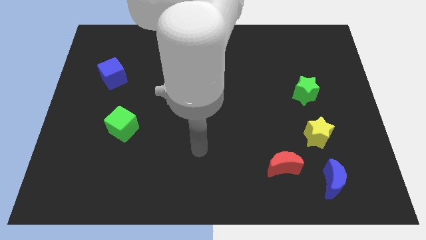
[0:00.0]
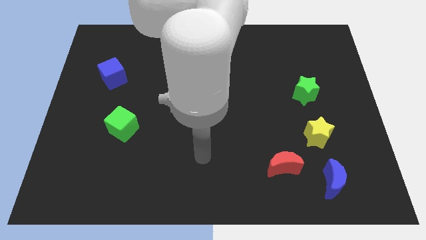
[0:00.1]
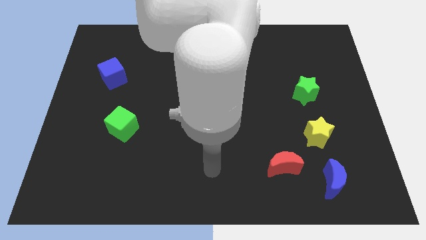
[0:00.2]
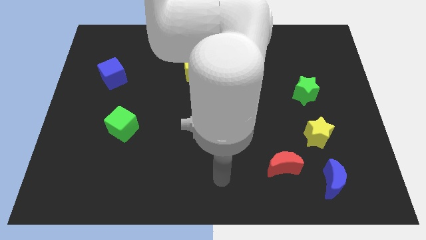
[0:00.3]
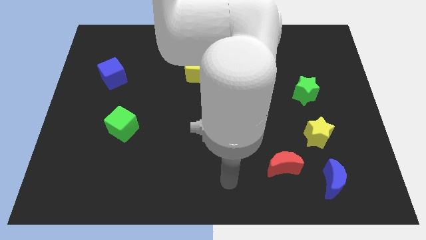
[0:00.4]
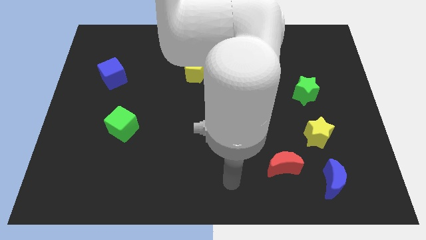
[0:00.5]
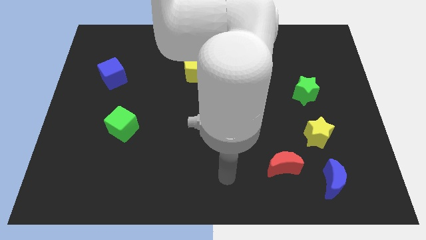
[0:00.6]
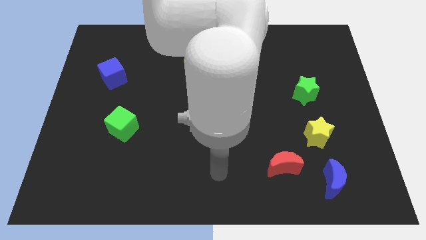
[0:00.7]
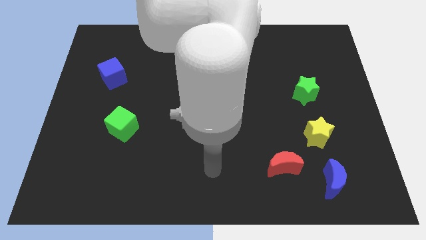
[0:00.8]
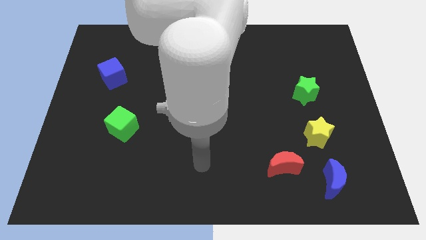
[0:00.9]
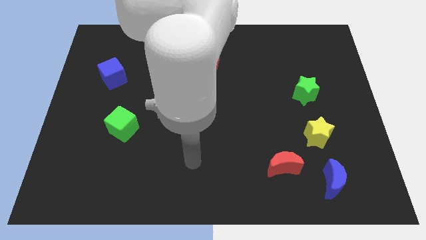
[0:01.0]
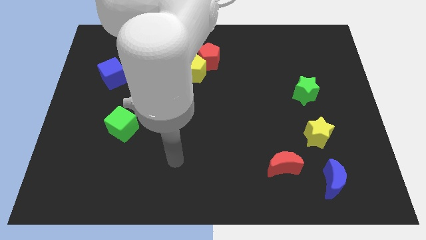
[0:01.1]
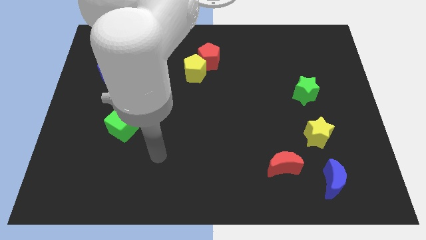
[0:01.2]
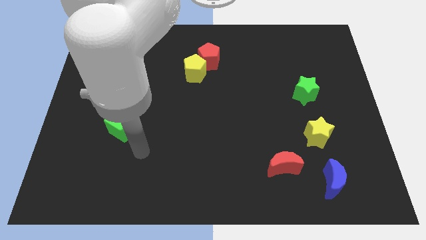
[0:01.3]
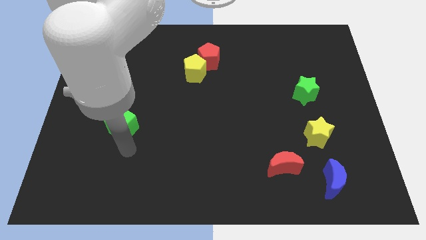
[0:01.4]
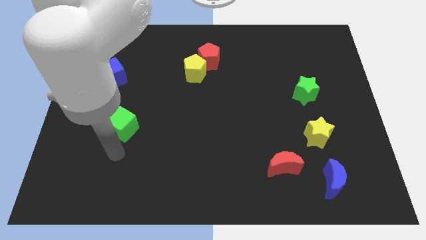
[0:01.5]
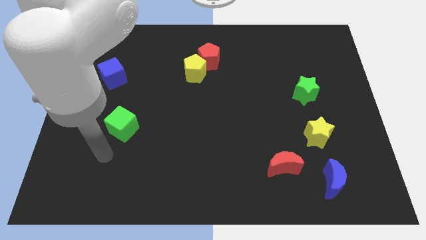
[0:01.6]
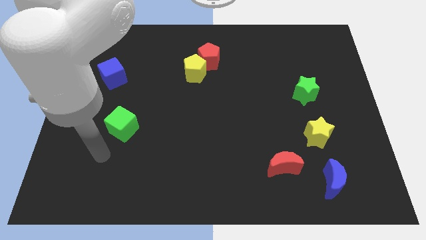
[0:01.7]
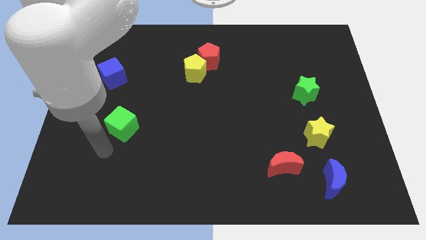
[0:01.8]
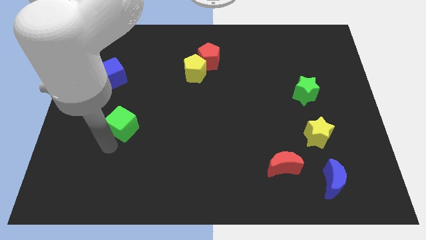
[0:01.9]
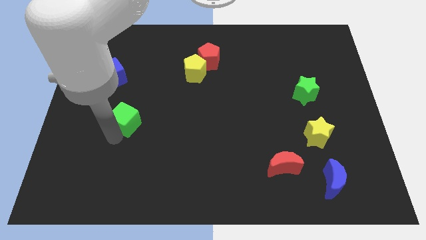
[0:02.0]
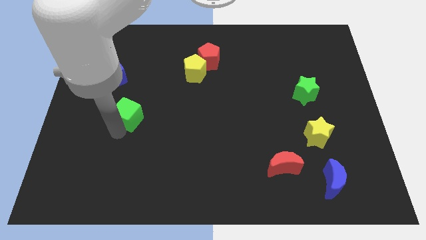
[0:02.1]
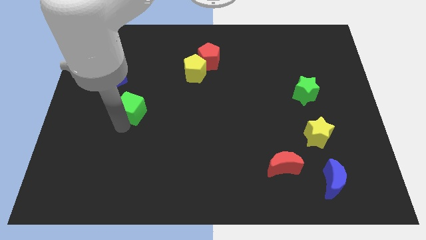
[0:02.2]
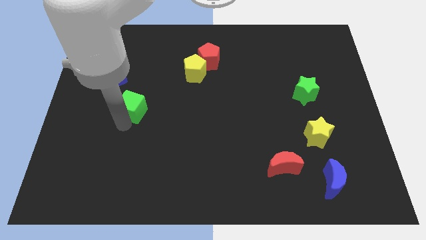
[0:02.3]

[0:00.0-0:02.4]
slightly push the green cube

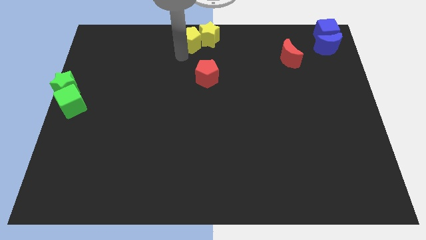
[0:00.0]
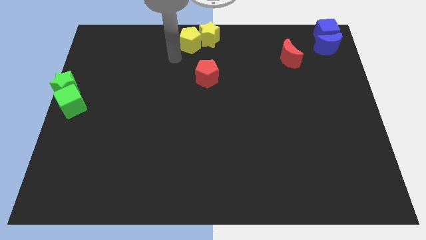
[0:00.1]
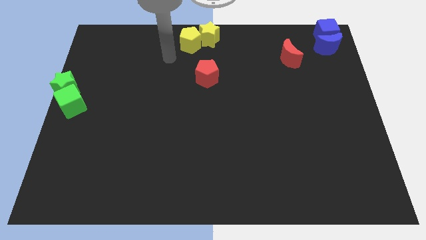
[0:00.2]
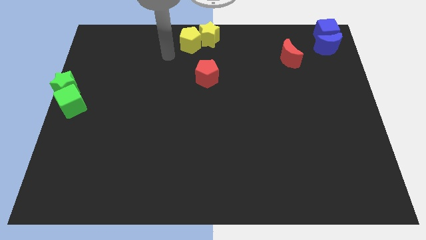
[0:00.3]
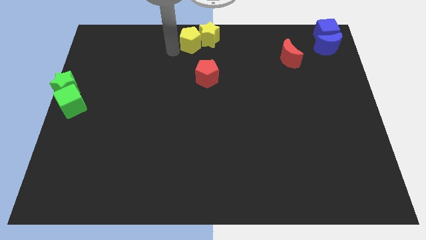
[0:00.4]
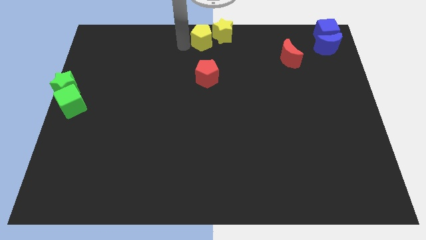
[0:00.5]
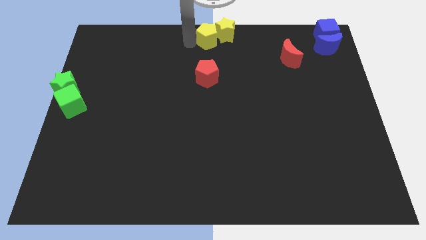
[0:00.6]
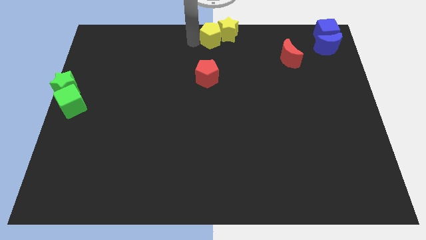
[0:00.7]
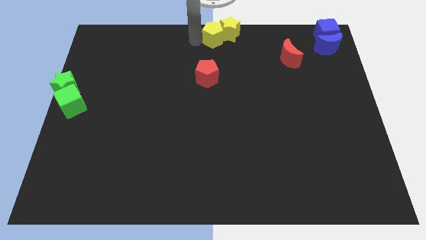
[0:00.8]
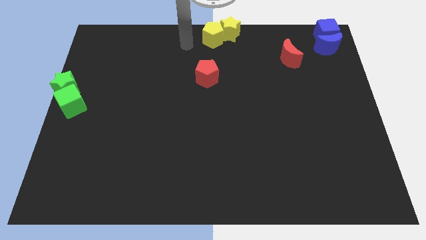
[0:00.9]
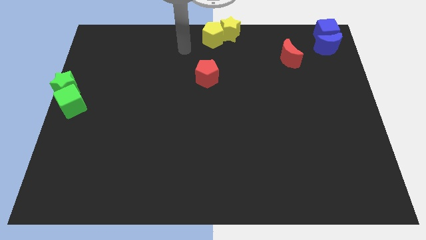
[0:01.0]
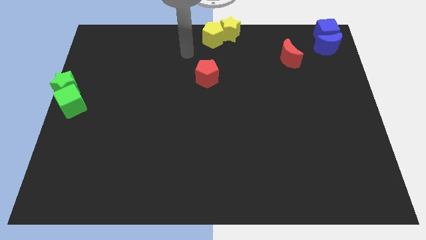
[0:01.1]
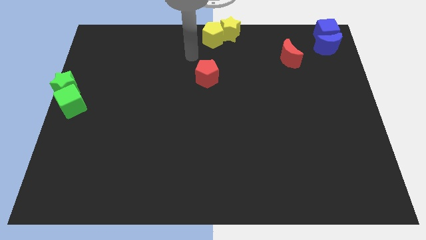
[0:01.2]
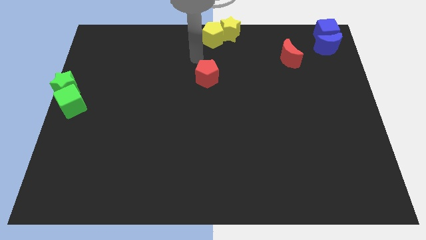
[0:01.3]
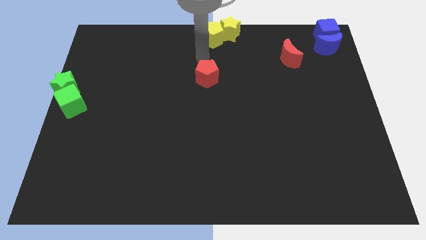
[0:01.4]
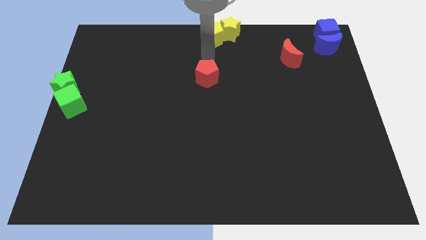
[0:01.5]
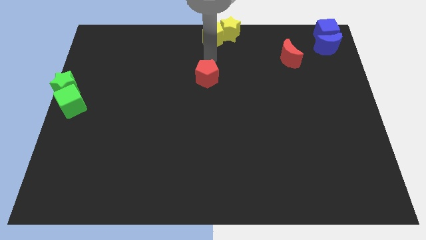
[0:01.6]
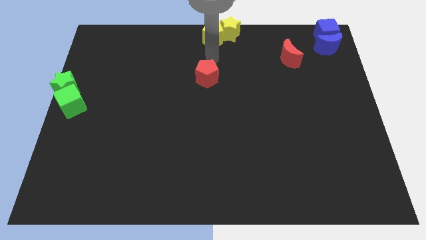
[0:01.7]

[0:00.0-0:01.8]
move the yellow pentagon above the red pentagon

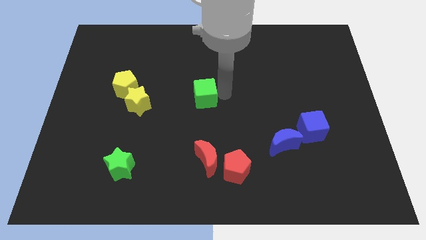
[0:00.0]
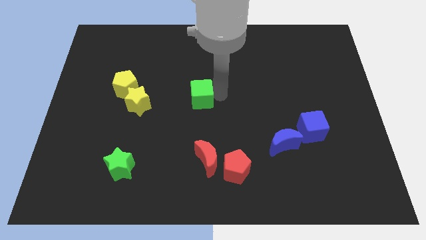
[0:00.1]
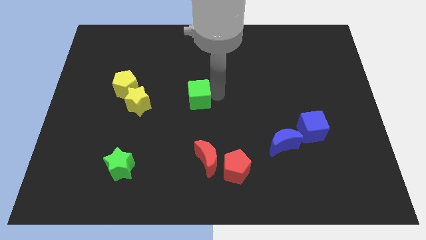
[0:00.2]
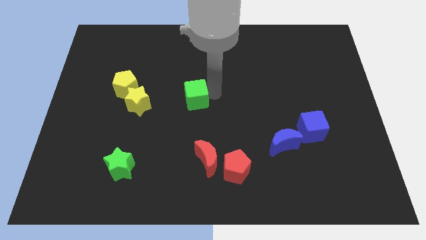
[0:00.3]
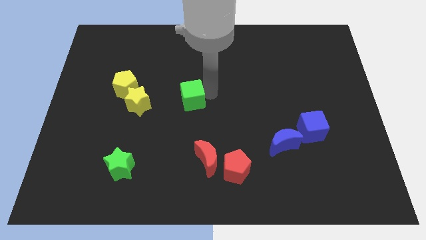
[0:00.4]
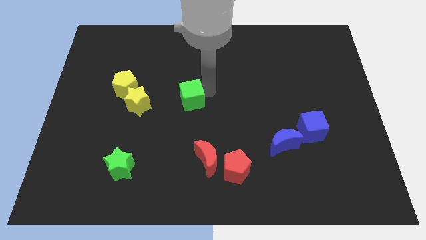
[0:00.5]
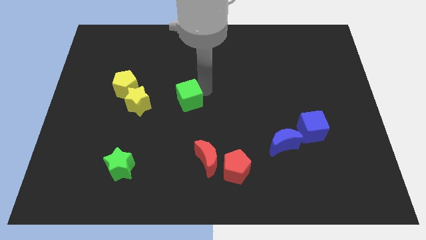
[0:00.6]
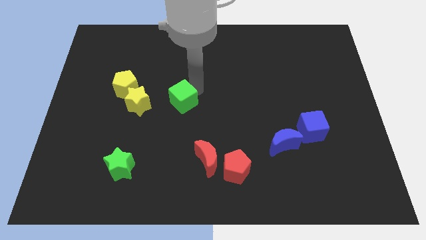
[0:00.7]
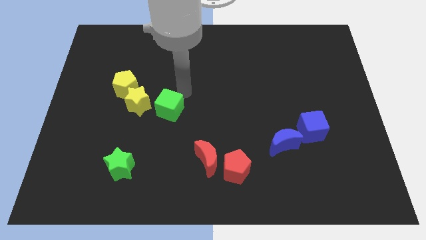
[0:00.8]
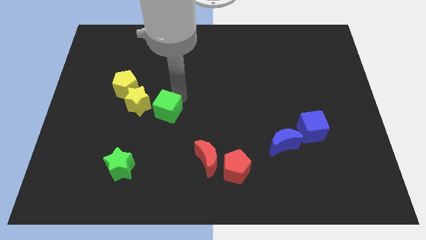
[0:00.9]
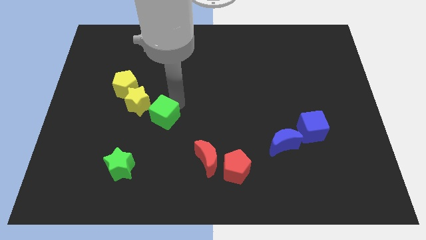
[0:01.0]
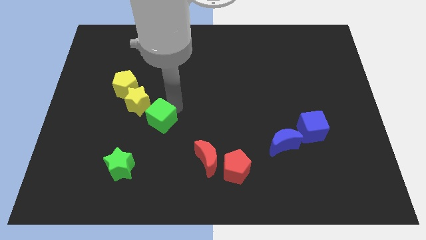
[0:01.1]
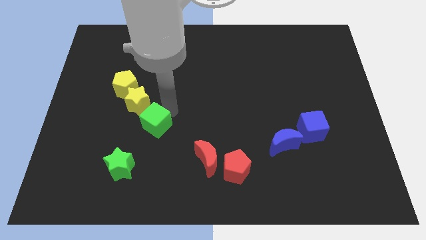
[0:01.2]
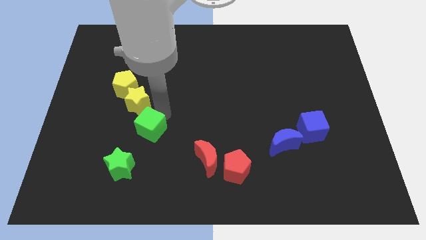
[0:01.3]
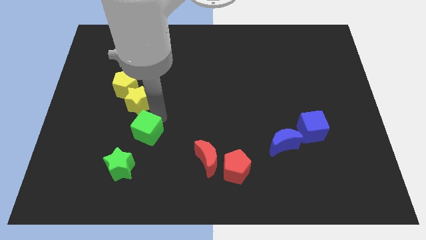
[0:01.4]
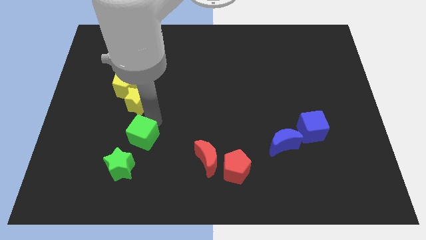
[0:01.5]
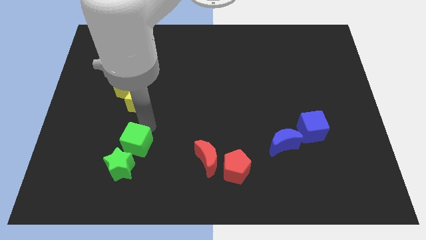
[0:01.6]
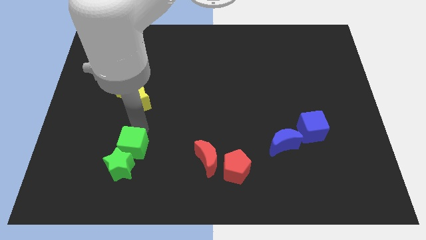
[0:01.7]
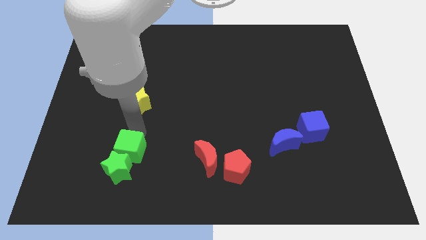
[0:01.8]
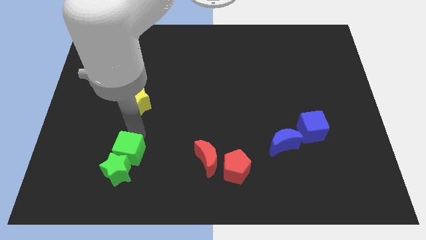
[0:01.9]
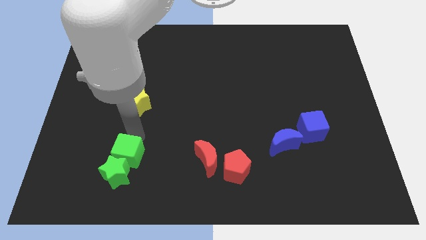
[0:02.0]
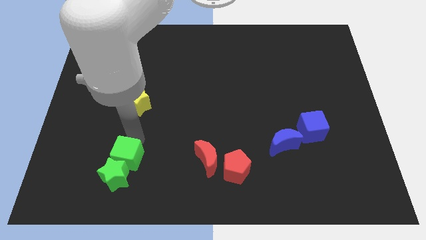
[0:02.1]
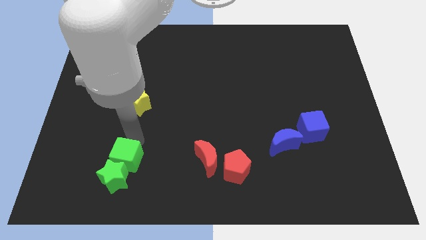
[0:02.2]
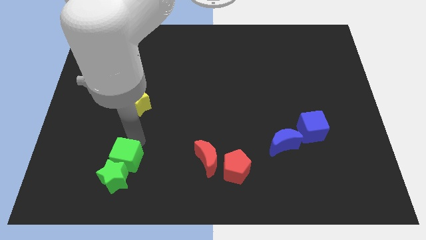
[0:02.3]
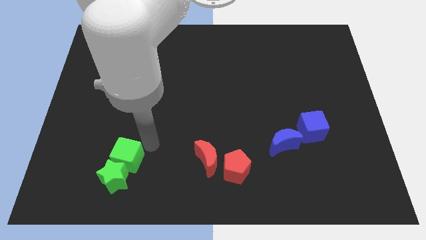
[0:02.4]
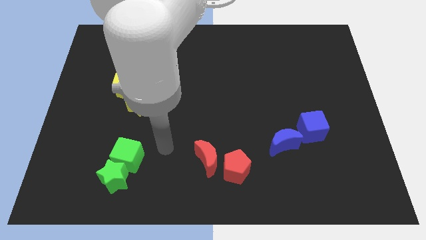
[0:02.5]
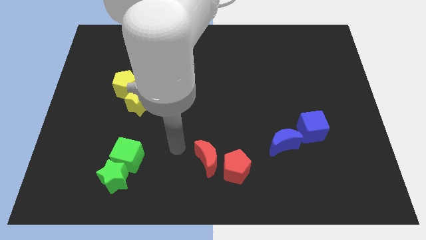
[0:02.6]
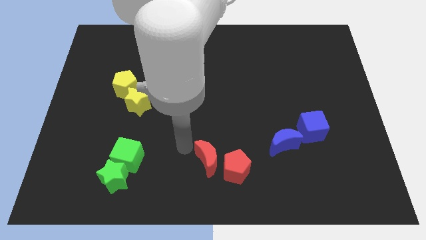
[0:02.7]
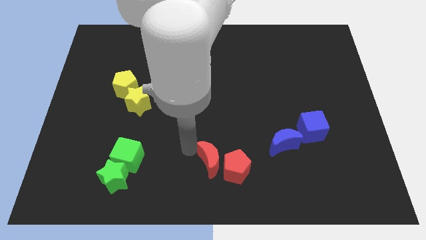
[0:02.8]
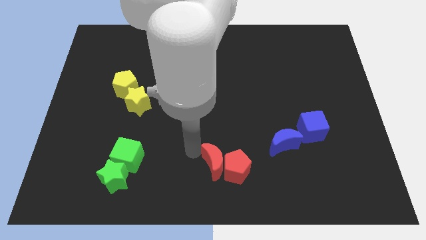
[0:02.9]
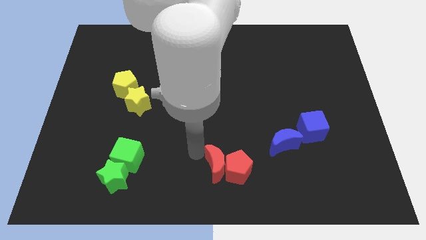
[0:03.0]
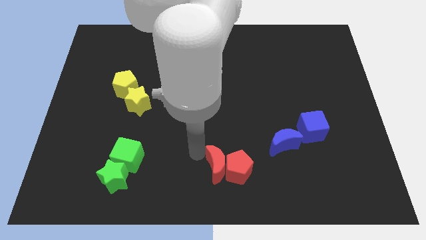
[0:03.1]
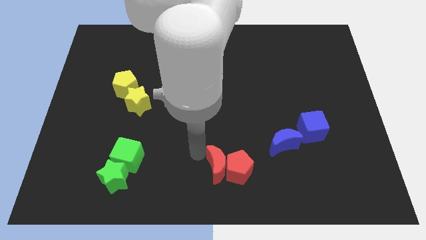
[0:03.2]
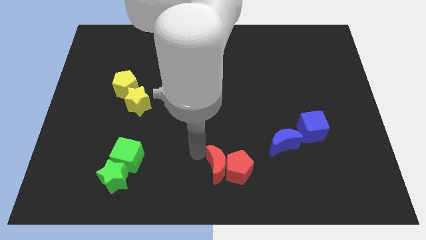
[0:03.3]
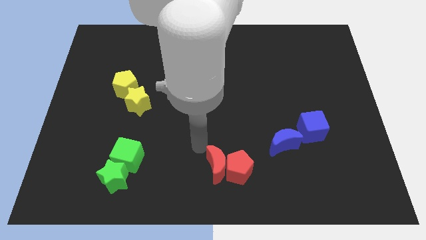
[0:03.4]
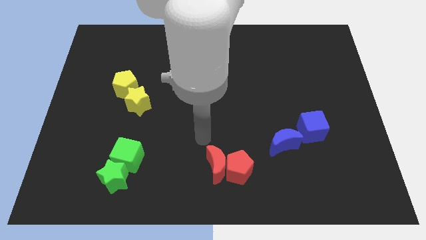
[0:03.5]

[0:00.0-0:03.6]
push the green cube into the green star

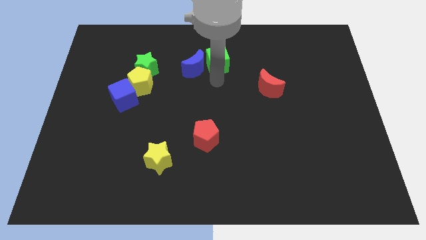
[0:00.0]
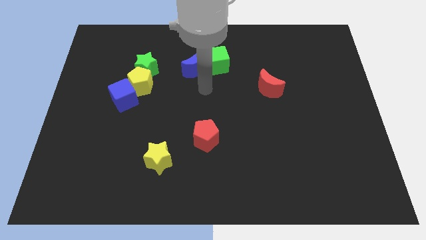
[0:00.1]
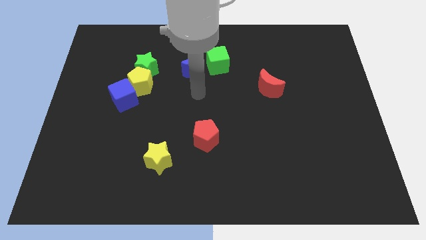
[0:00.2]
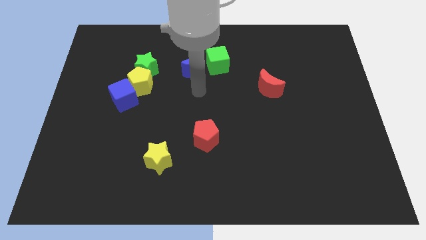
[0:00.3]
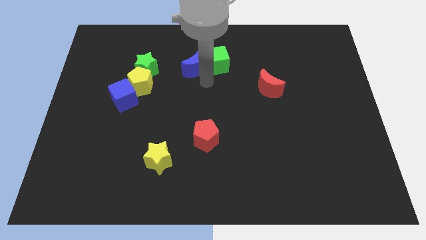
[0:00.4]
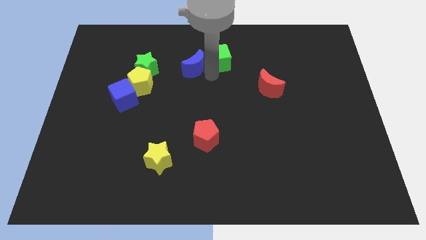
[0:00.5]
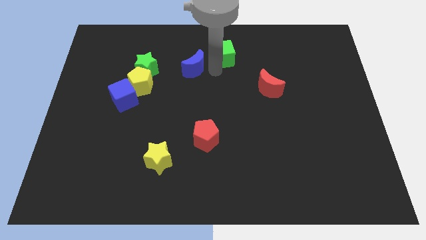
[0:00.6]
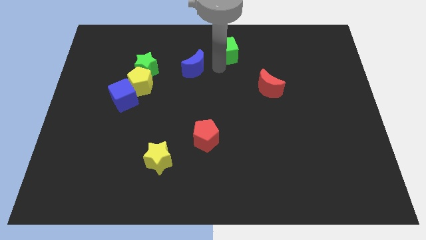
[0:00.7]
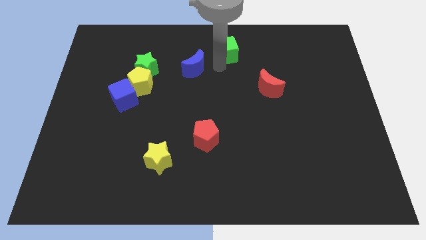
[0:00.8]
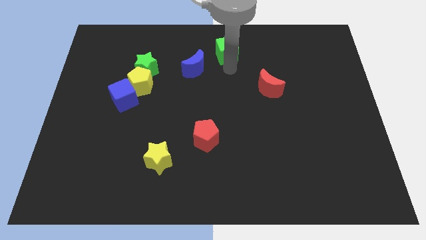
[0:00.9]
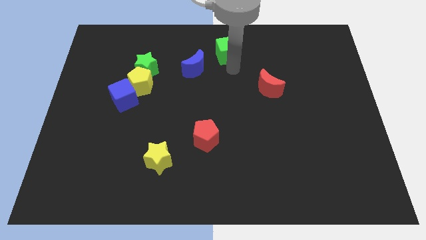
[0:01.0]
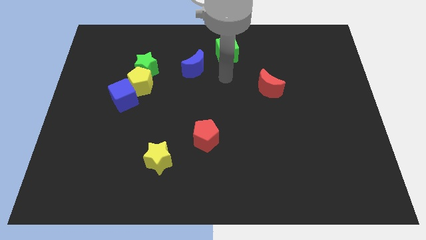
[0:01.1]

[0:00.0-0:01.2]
push the green cube towards the top center
